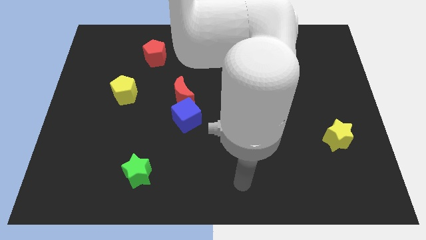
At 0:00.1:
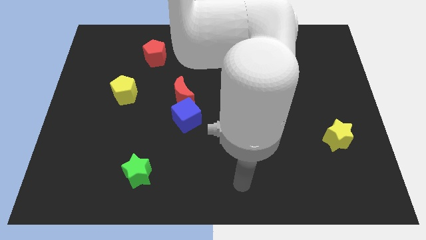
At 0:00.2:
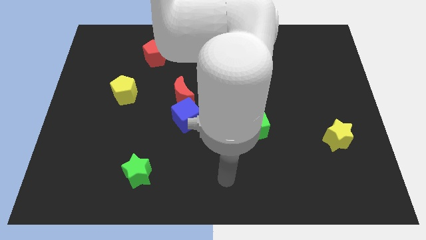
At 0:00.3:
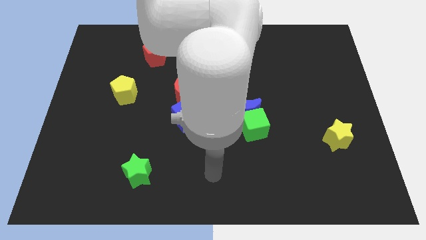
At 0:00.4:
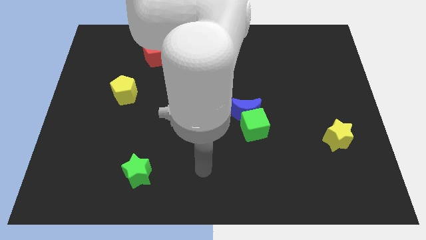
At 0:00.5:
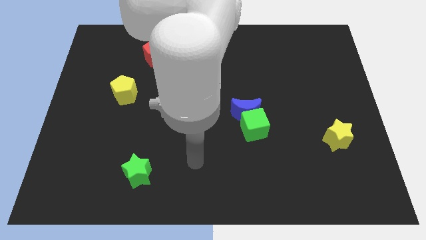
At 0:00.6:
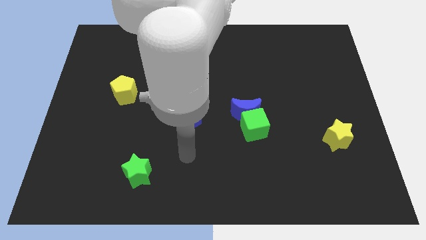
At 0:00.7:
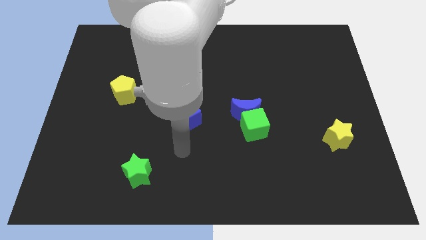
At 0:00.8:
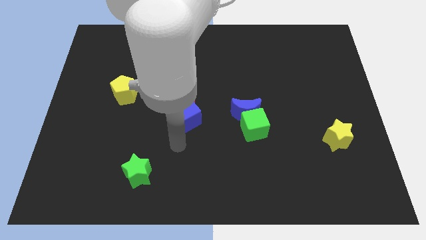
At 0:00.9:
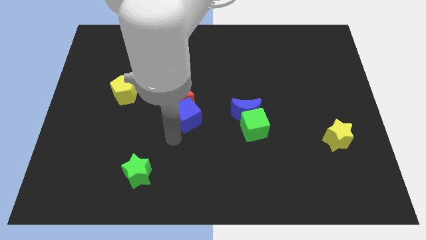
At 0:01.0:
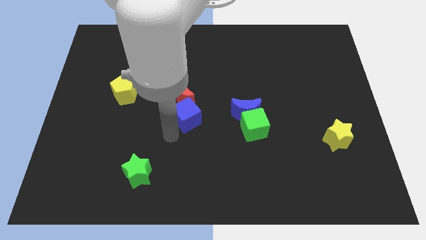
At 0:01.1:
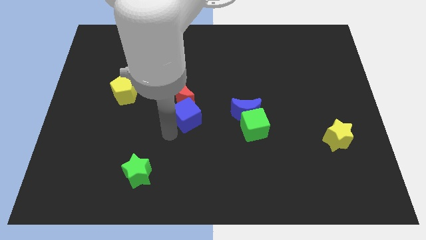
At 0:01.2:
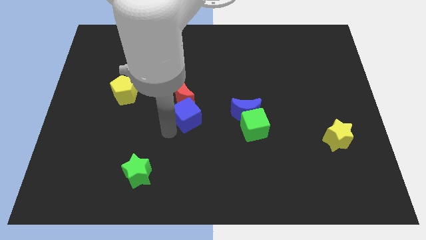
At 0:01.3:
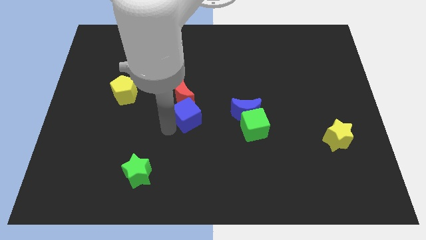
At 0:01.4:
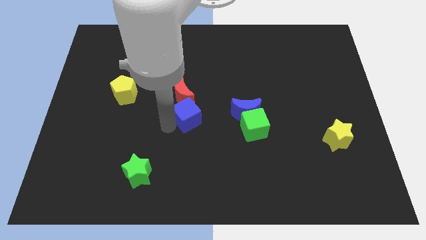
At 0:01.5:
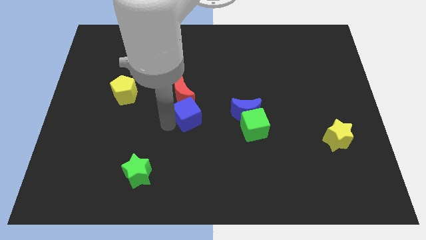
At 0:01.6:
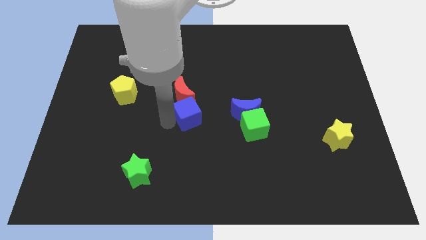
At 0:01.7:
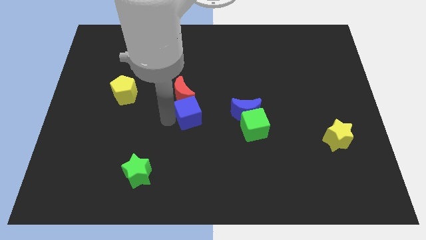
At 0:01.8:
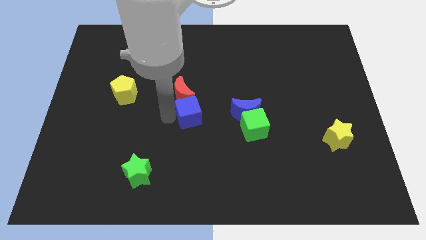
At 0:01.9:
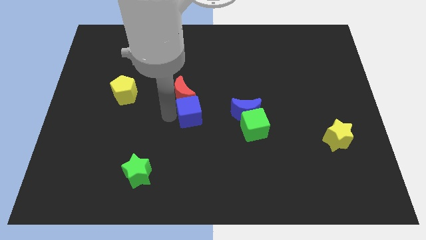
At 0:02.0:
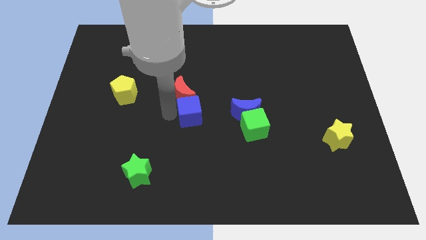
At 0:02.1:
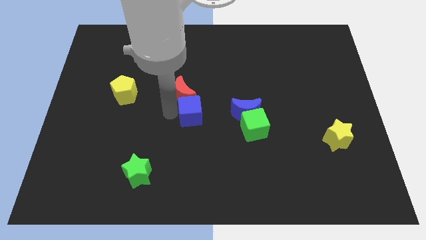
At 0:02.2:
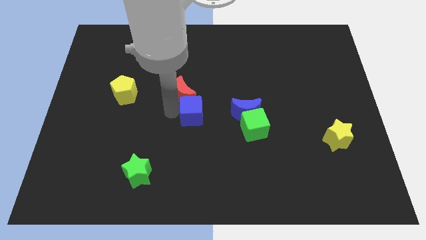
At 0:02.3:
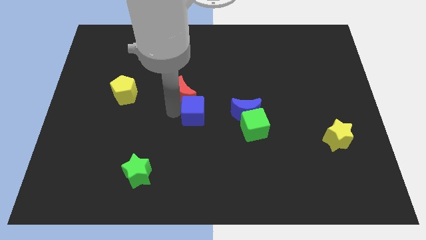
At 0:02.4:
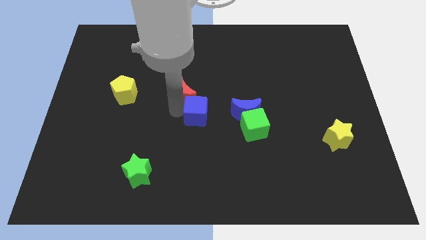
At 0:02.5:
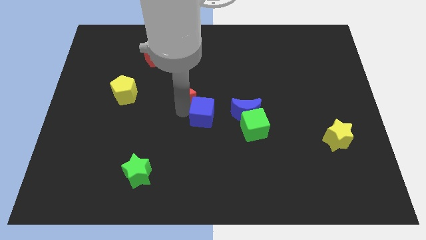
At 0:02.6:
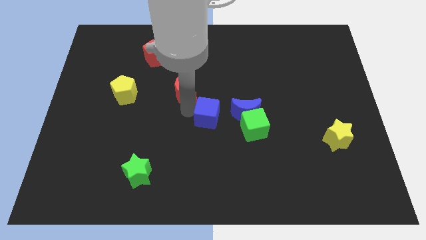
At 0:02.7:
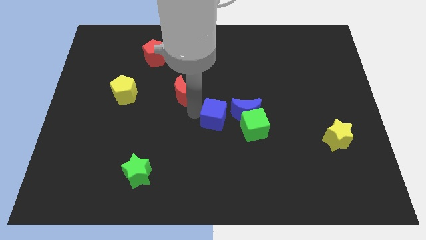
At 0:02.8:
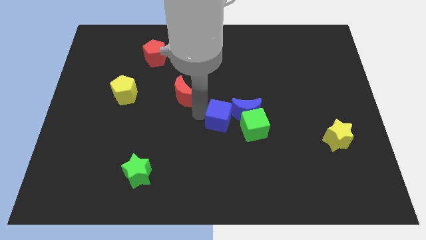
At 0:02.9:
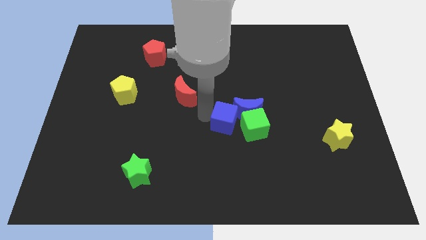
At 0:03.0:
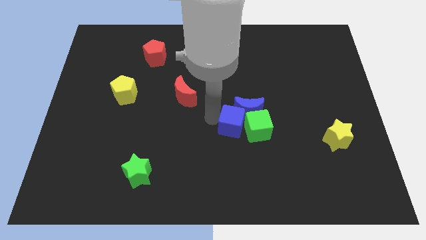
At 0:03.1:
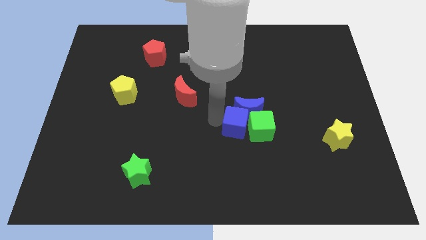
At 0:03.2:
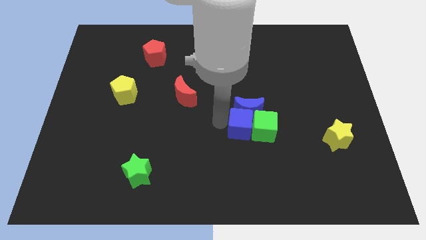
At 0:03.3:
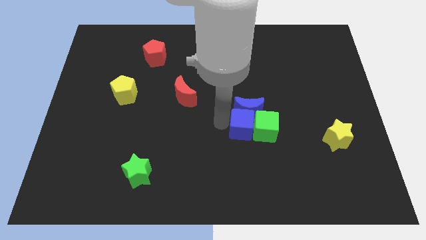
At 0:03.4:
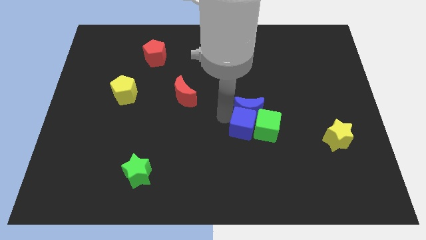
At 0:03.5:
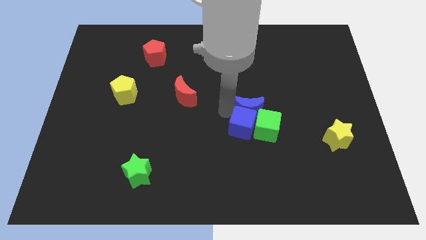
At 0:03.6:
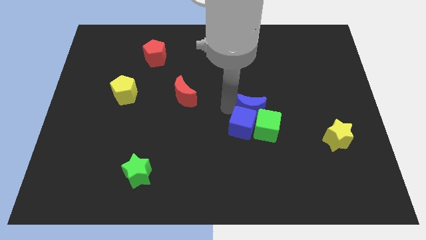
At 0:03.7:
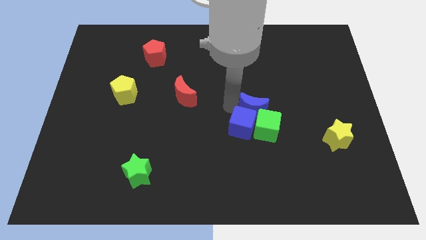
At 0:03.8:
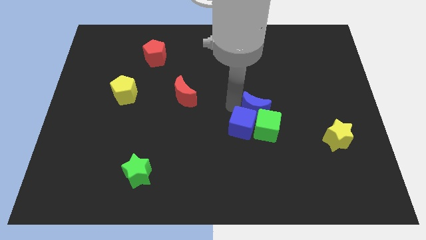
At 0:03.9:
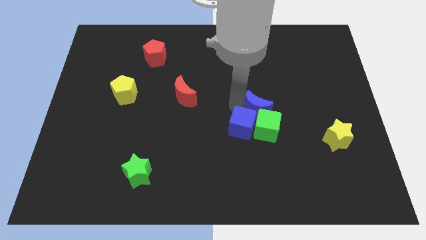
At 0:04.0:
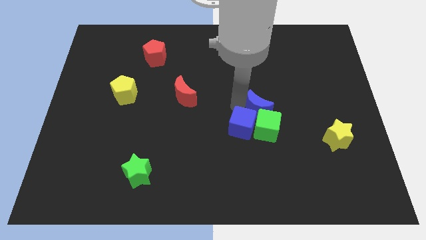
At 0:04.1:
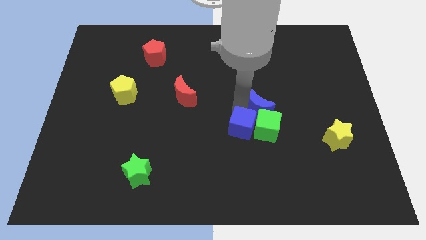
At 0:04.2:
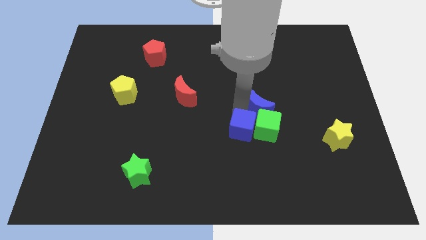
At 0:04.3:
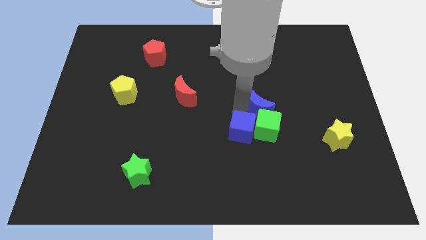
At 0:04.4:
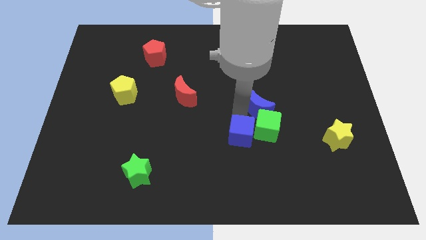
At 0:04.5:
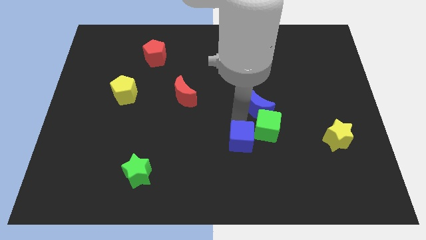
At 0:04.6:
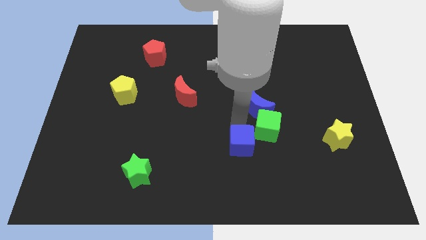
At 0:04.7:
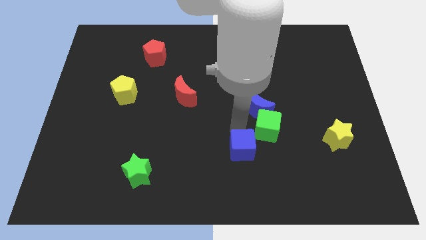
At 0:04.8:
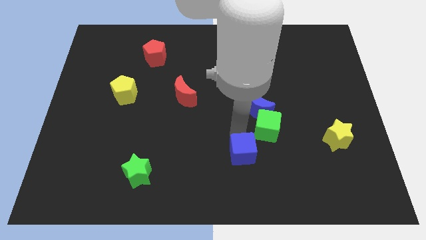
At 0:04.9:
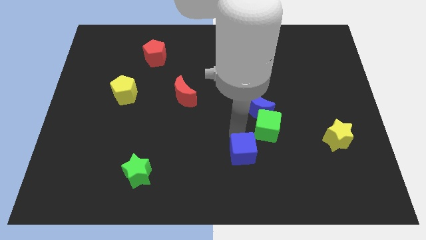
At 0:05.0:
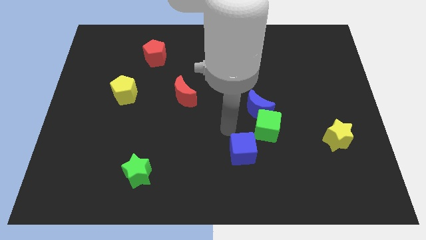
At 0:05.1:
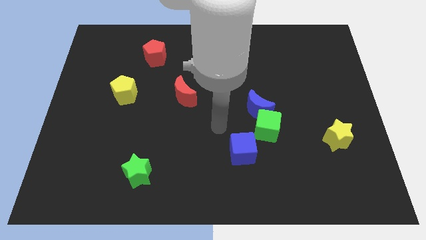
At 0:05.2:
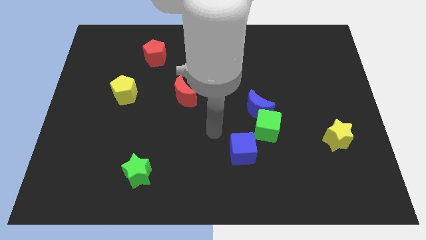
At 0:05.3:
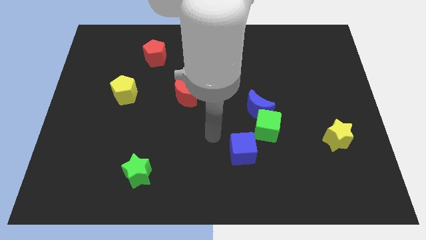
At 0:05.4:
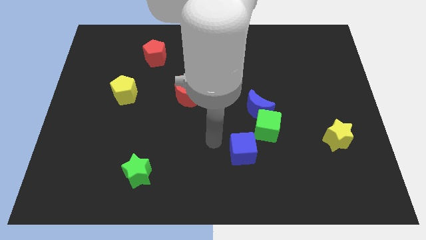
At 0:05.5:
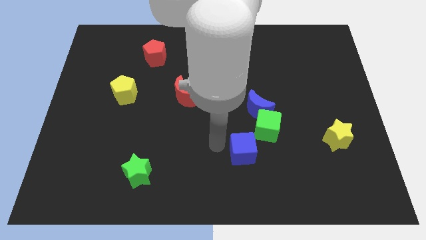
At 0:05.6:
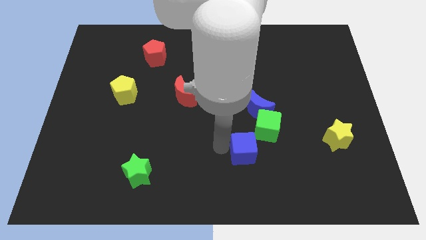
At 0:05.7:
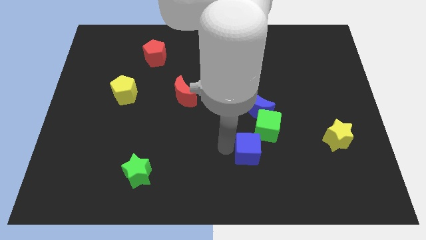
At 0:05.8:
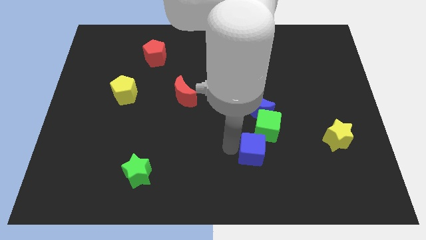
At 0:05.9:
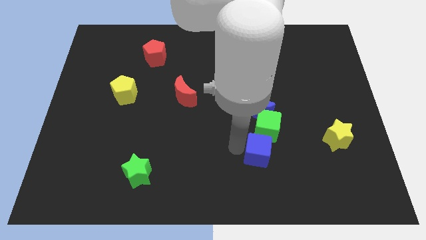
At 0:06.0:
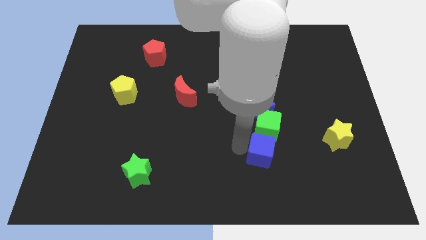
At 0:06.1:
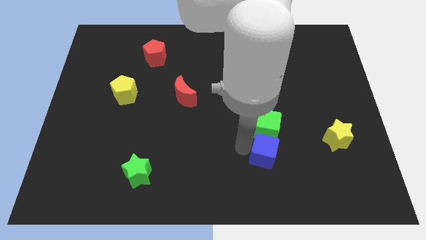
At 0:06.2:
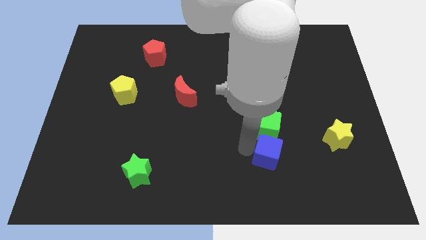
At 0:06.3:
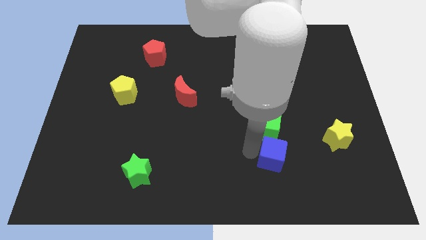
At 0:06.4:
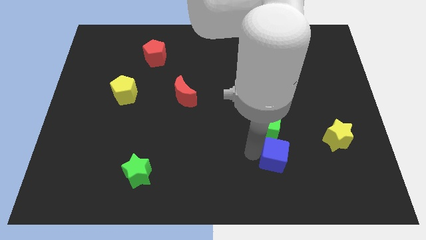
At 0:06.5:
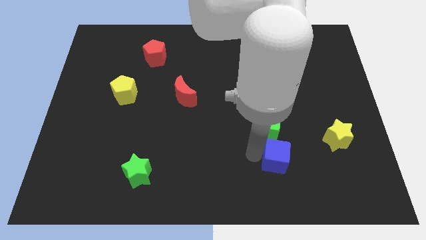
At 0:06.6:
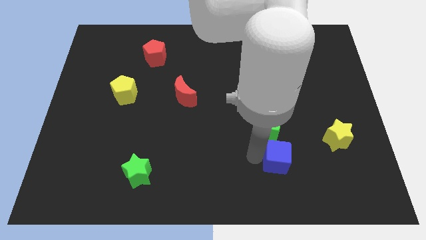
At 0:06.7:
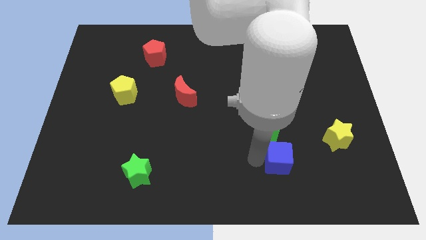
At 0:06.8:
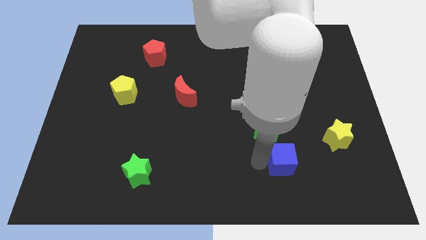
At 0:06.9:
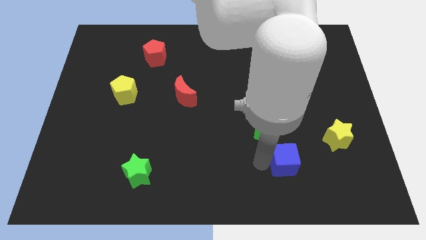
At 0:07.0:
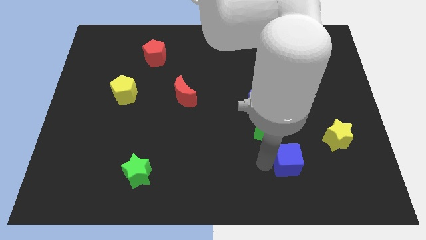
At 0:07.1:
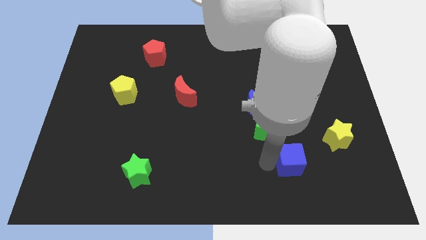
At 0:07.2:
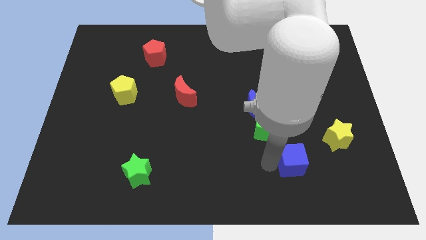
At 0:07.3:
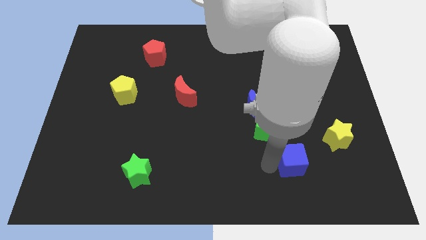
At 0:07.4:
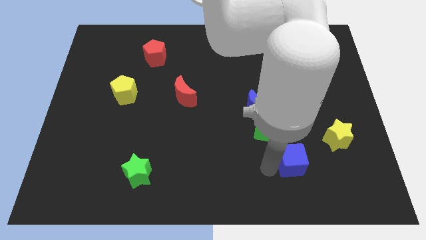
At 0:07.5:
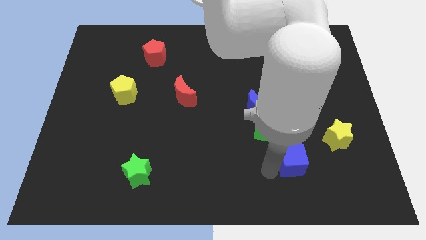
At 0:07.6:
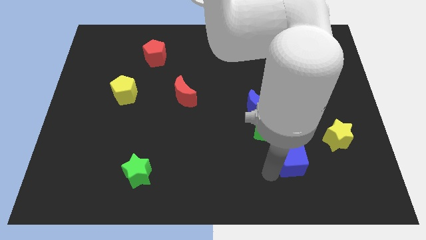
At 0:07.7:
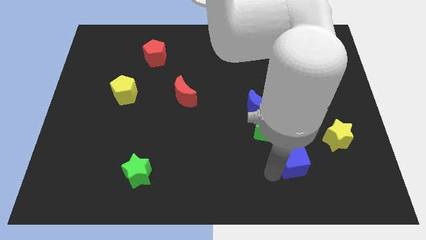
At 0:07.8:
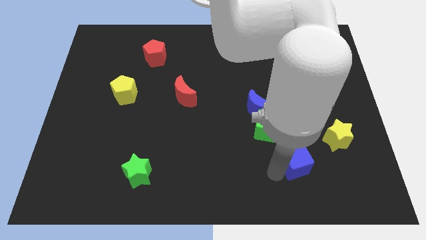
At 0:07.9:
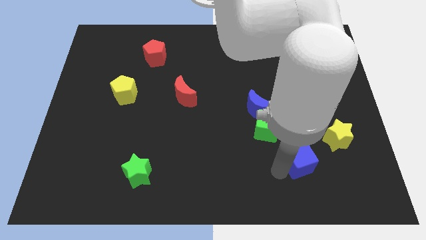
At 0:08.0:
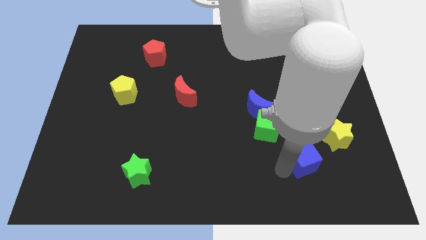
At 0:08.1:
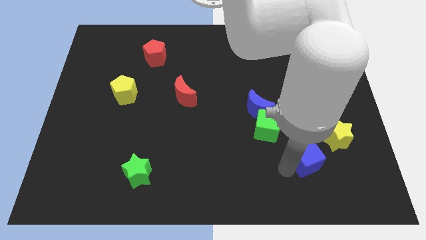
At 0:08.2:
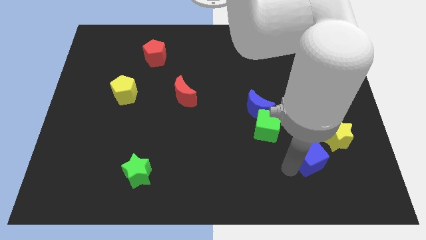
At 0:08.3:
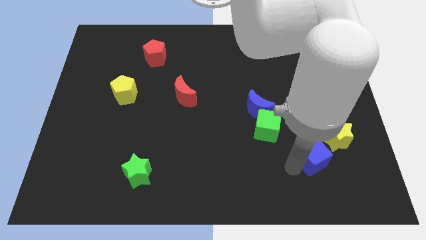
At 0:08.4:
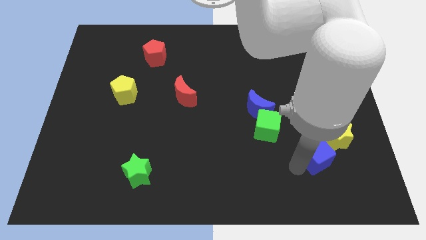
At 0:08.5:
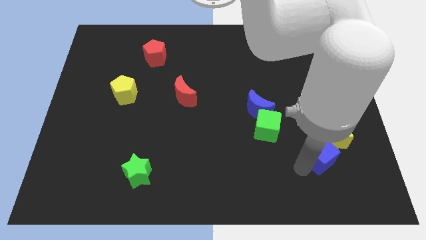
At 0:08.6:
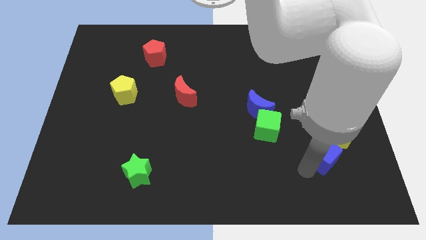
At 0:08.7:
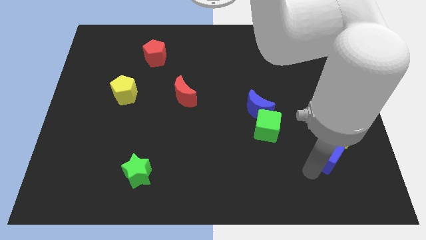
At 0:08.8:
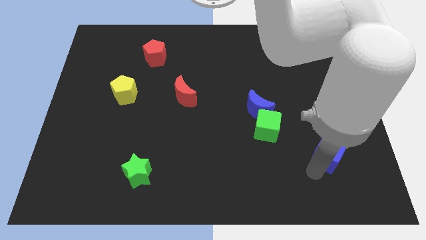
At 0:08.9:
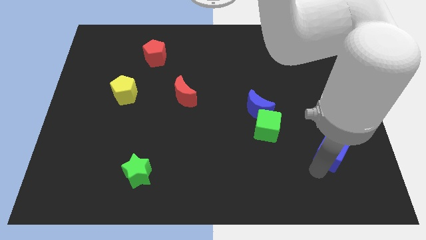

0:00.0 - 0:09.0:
slide the blue cube to the yellow star
